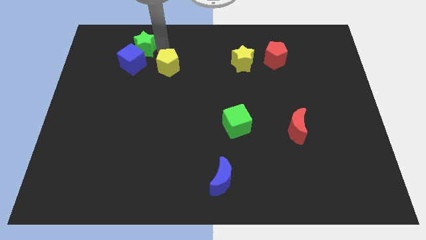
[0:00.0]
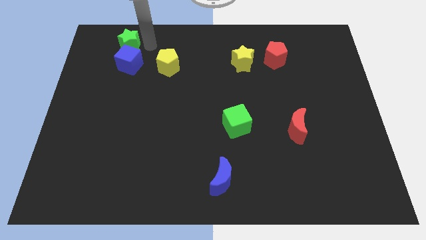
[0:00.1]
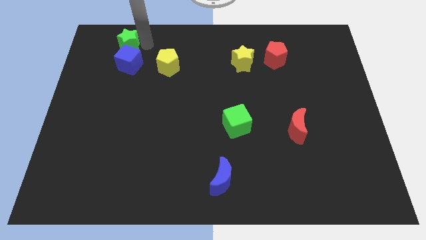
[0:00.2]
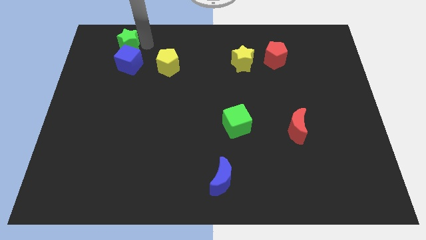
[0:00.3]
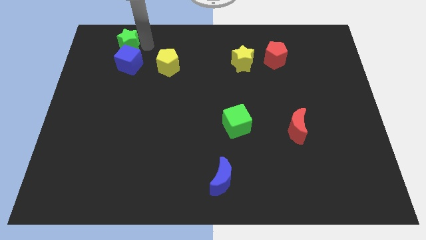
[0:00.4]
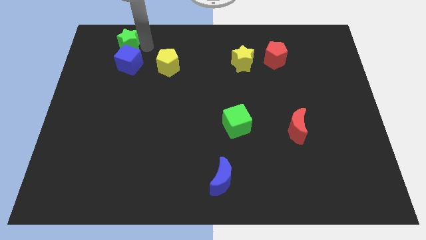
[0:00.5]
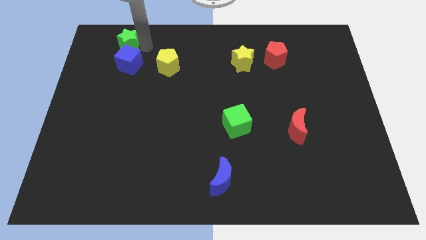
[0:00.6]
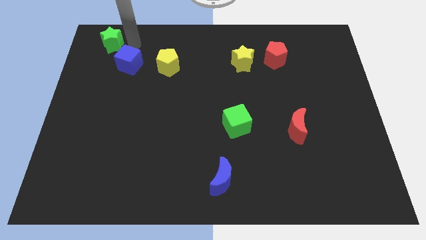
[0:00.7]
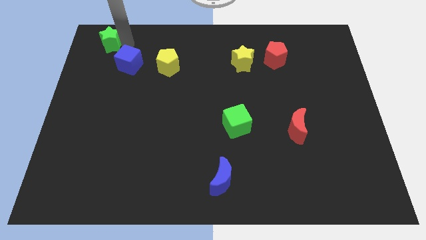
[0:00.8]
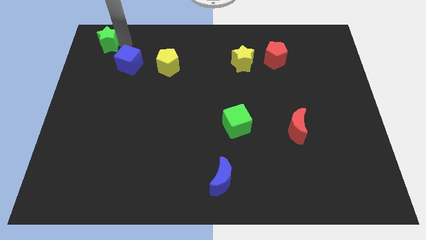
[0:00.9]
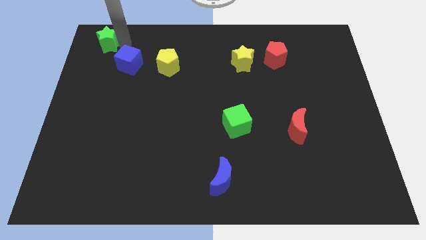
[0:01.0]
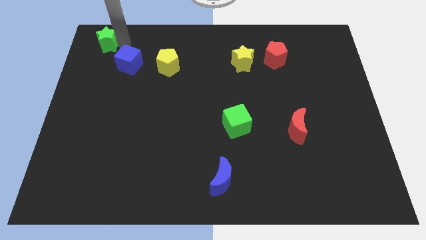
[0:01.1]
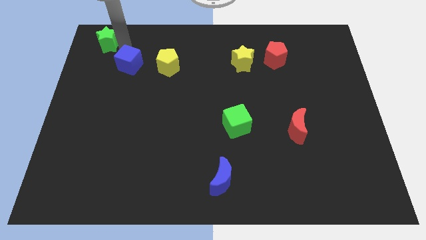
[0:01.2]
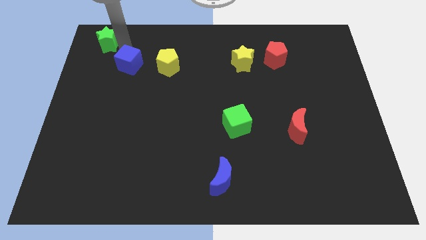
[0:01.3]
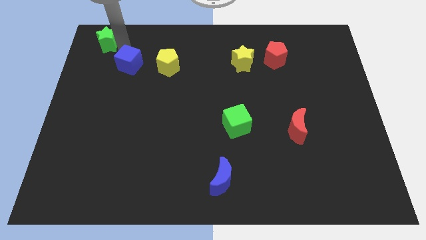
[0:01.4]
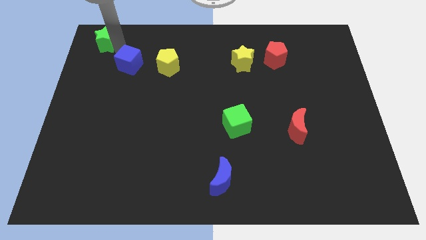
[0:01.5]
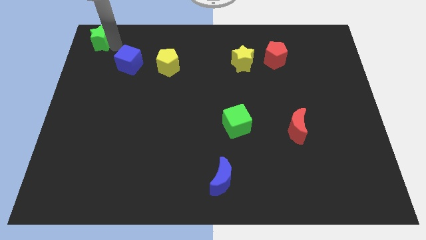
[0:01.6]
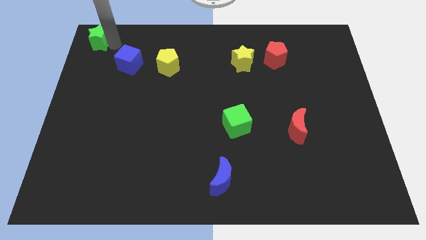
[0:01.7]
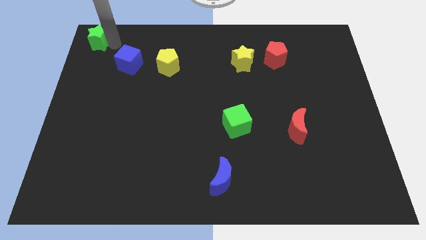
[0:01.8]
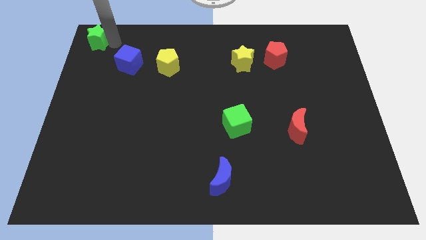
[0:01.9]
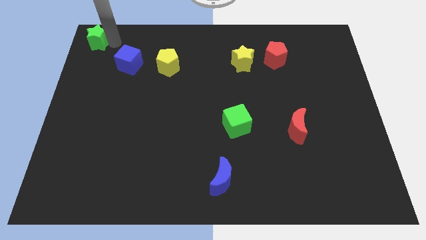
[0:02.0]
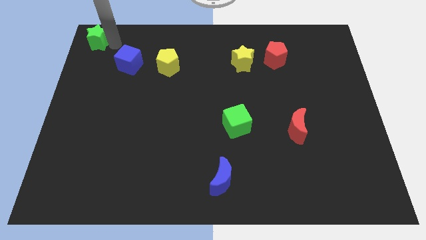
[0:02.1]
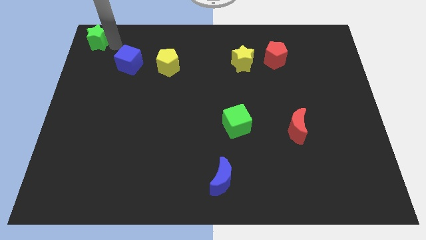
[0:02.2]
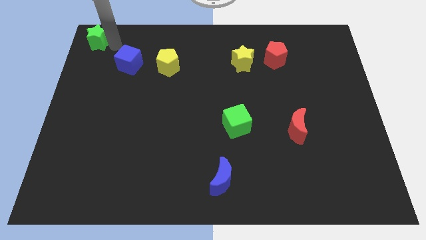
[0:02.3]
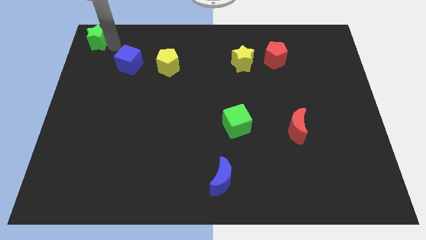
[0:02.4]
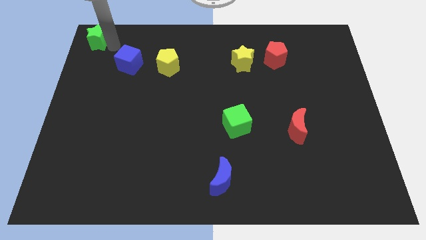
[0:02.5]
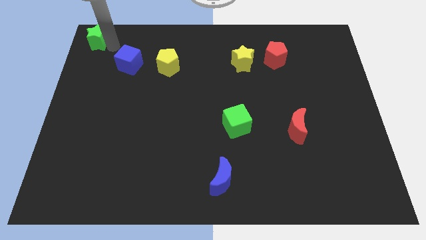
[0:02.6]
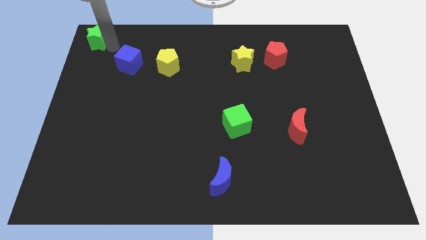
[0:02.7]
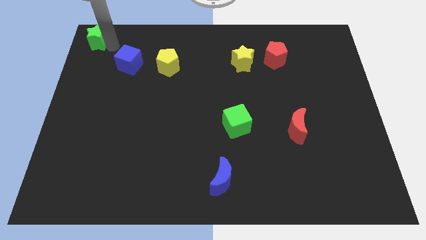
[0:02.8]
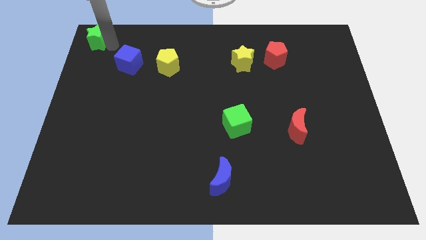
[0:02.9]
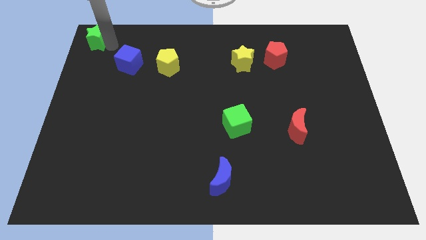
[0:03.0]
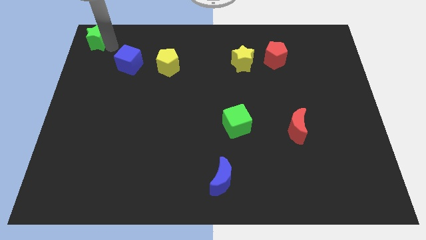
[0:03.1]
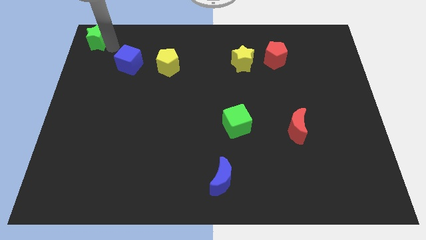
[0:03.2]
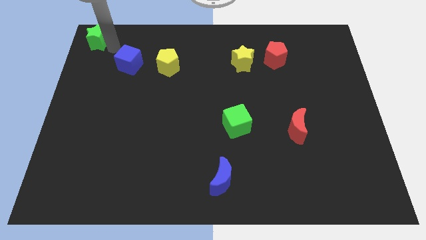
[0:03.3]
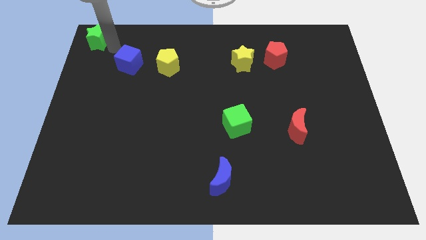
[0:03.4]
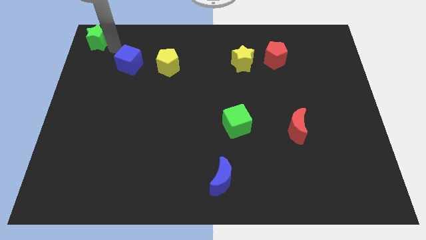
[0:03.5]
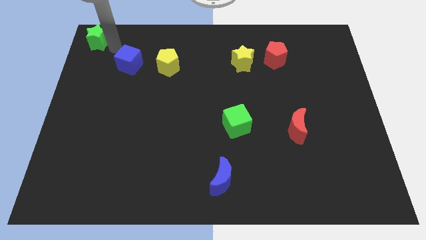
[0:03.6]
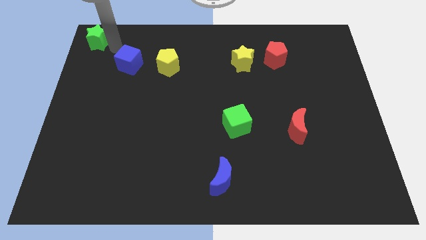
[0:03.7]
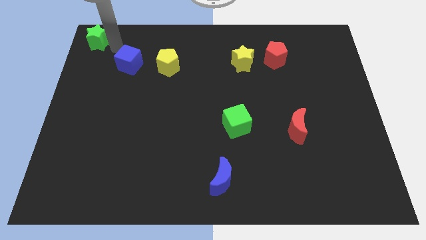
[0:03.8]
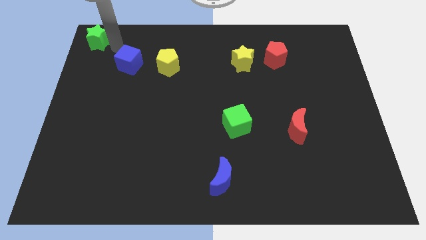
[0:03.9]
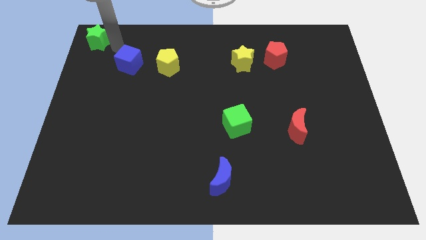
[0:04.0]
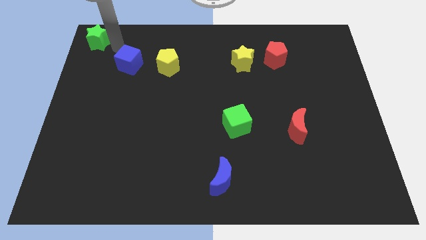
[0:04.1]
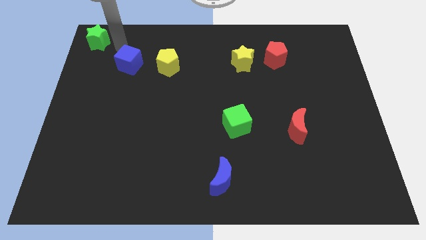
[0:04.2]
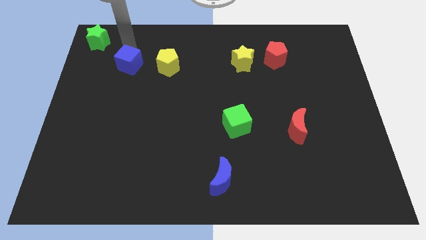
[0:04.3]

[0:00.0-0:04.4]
push the green star to the top left of the board

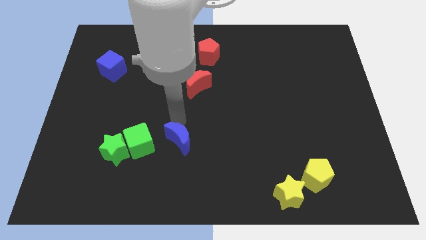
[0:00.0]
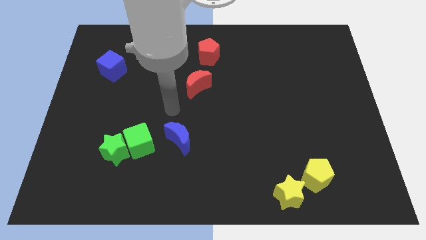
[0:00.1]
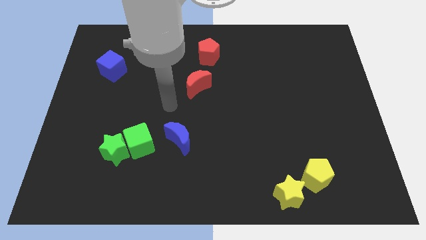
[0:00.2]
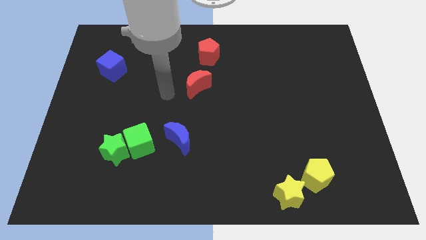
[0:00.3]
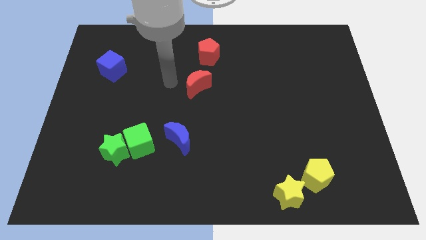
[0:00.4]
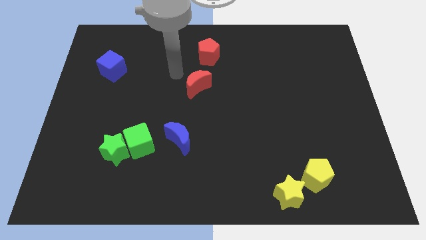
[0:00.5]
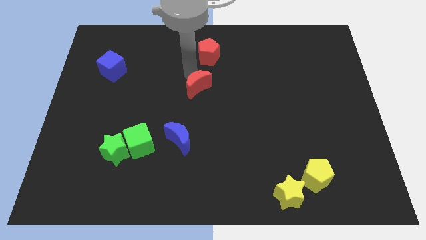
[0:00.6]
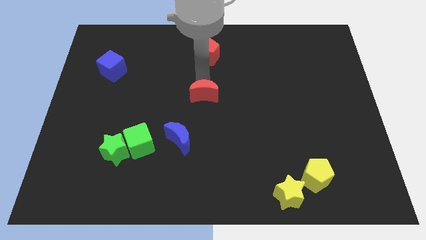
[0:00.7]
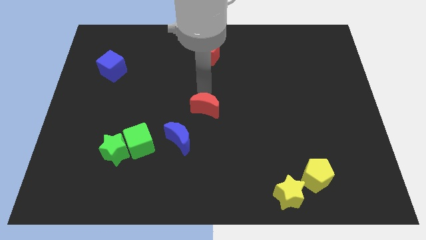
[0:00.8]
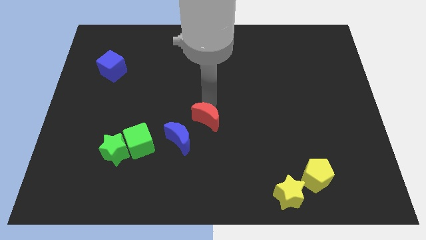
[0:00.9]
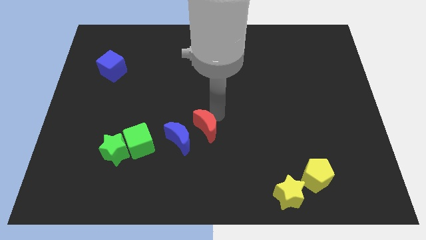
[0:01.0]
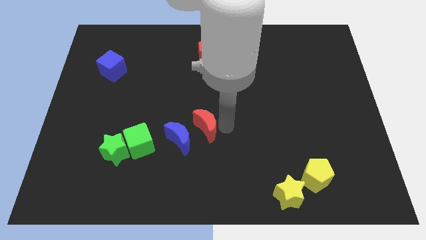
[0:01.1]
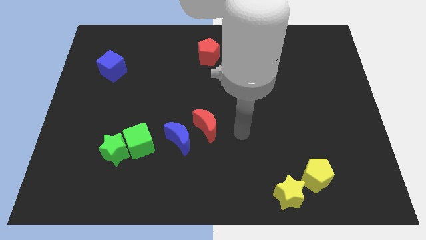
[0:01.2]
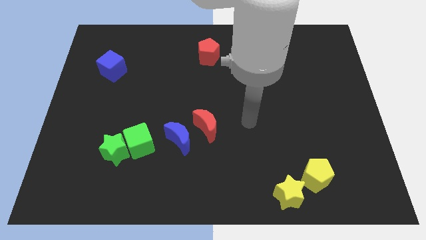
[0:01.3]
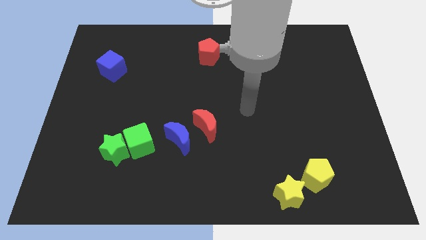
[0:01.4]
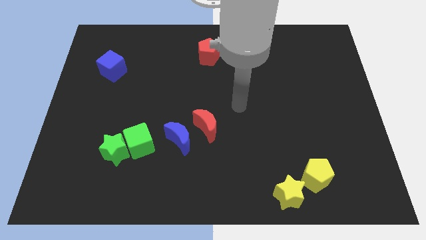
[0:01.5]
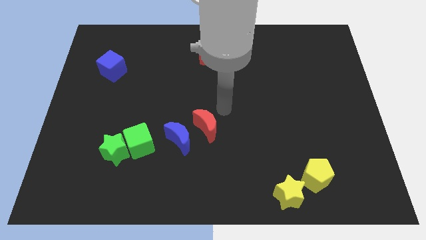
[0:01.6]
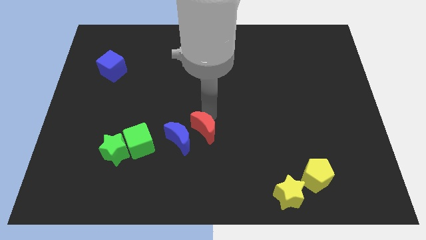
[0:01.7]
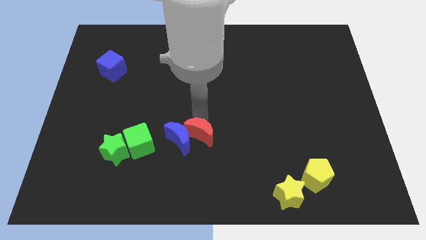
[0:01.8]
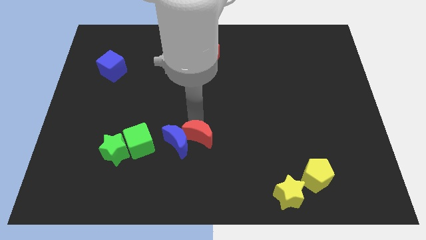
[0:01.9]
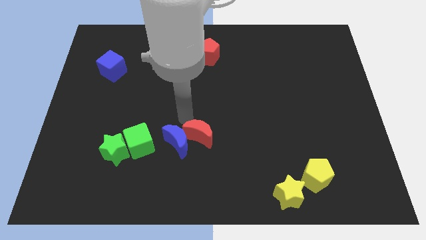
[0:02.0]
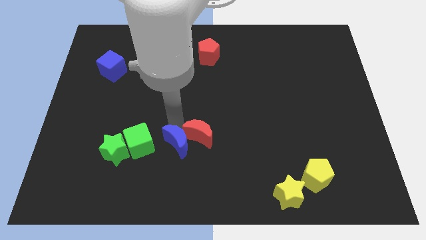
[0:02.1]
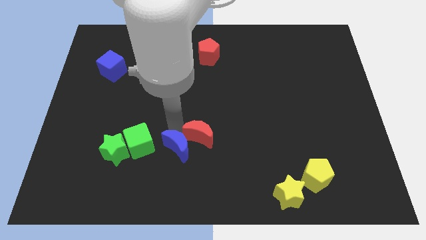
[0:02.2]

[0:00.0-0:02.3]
make the red crescent to touch the blue crescent

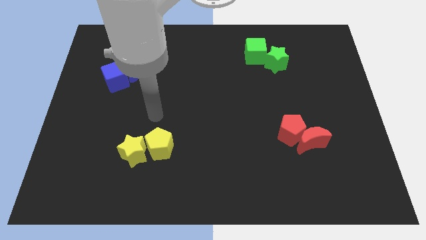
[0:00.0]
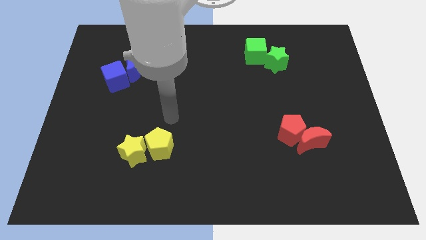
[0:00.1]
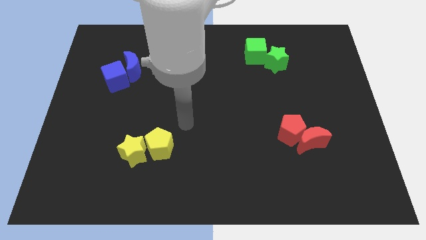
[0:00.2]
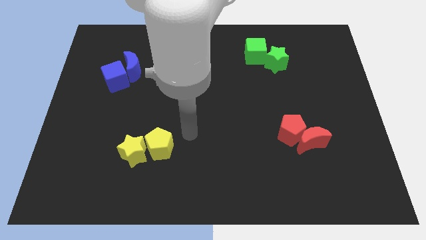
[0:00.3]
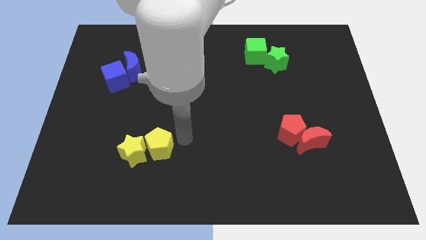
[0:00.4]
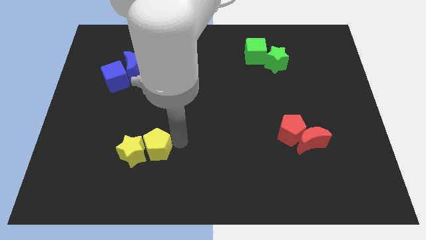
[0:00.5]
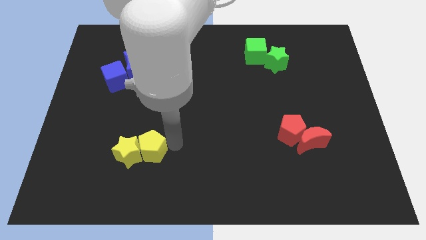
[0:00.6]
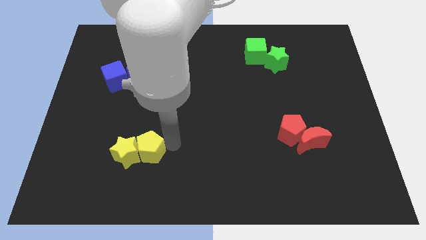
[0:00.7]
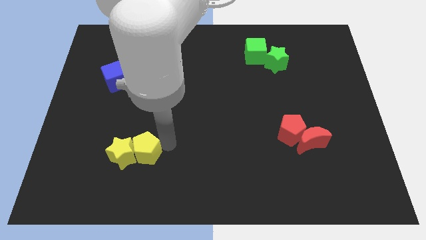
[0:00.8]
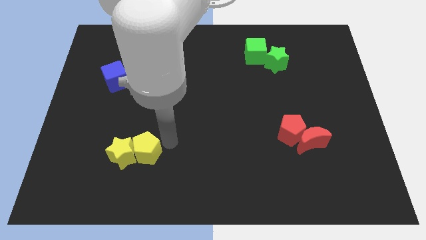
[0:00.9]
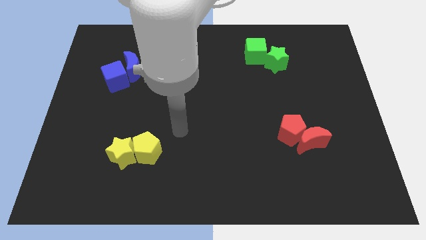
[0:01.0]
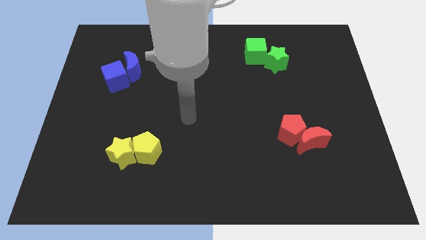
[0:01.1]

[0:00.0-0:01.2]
push yellow pentagon in yellow star

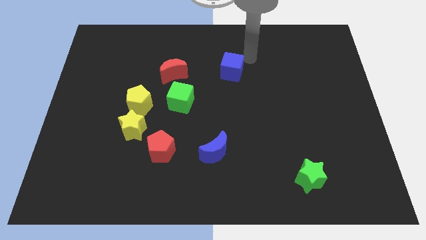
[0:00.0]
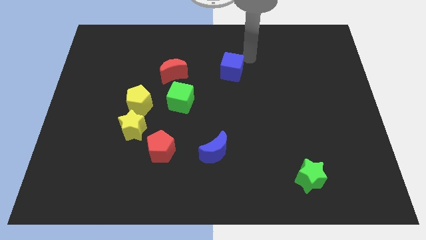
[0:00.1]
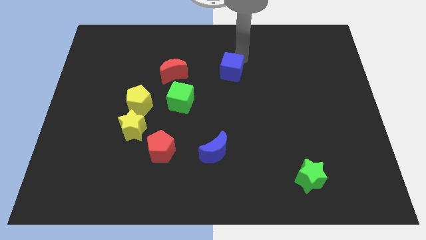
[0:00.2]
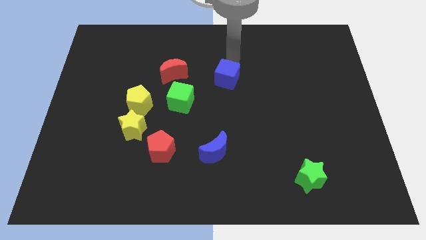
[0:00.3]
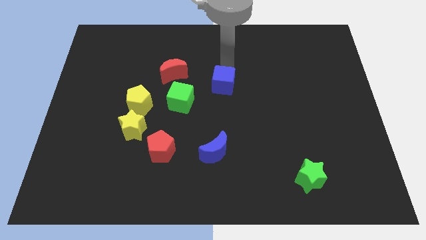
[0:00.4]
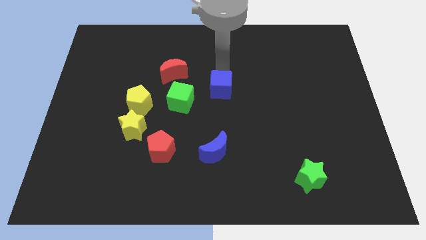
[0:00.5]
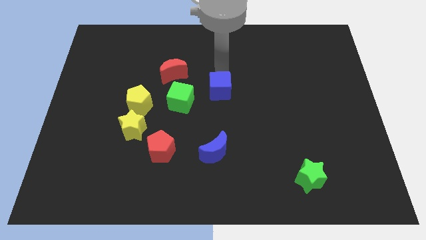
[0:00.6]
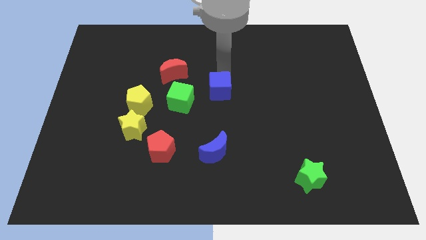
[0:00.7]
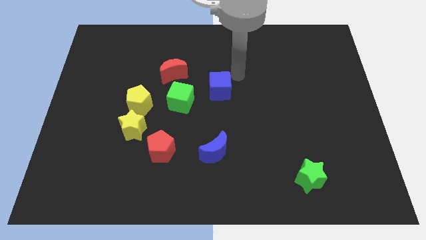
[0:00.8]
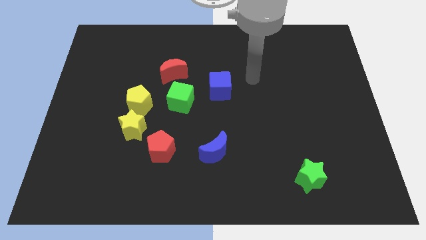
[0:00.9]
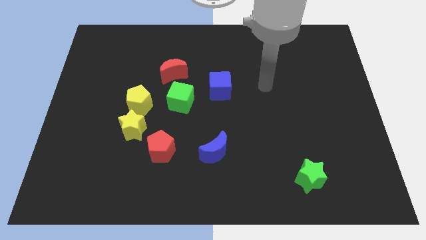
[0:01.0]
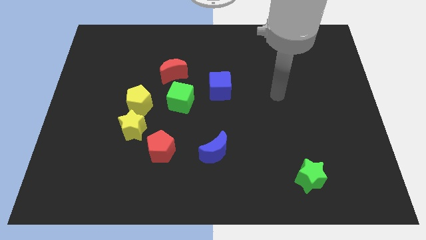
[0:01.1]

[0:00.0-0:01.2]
move the blue cube close to green cube
